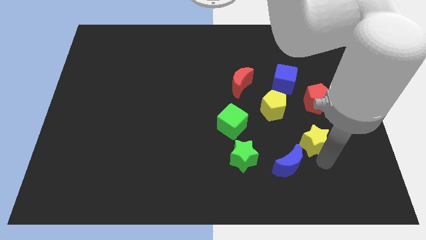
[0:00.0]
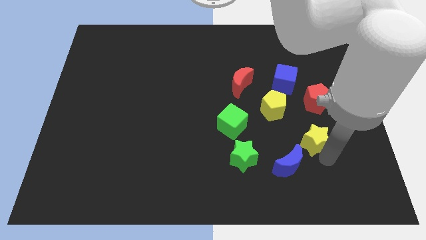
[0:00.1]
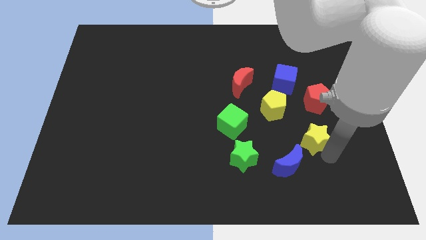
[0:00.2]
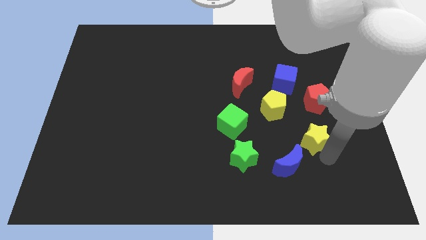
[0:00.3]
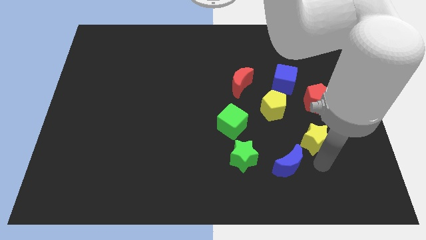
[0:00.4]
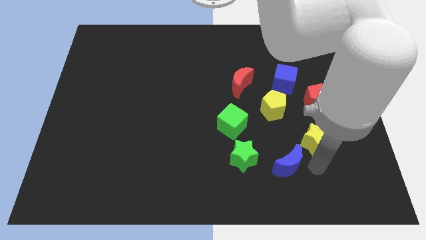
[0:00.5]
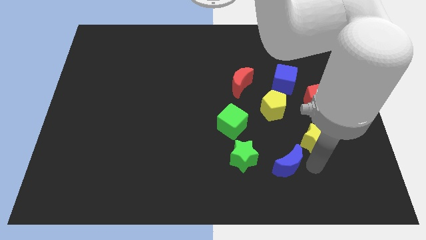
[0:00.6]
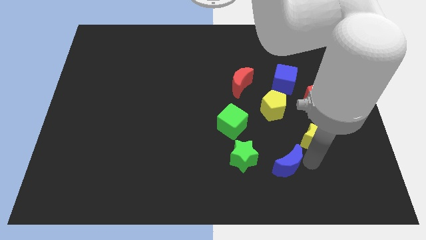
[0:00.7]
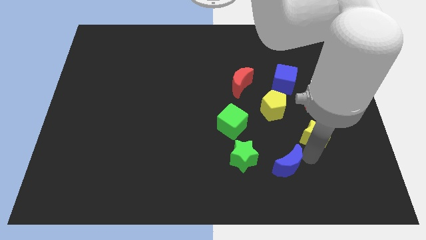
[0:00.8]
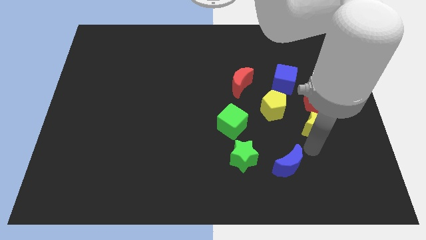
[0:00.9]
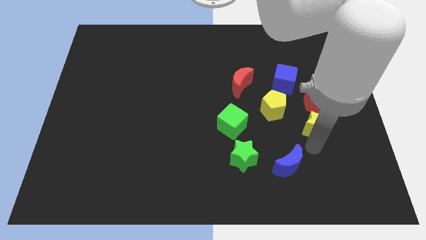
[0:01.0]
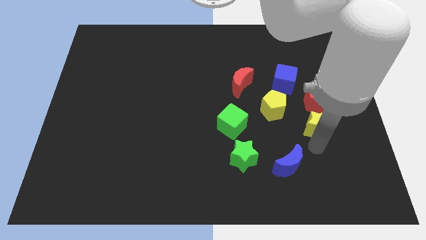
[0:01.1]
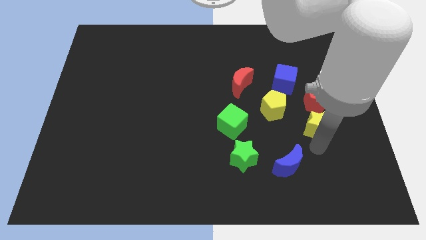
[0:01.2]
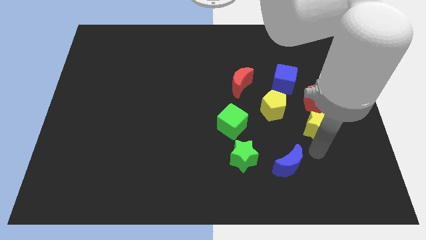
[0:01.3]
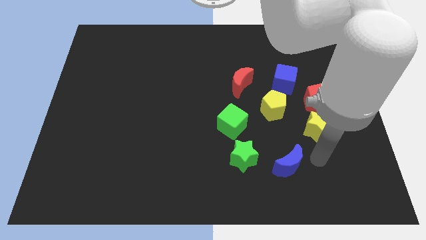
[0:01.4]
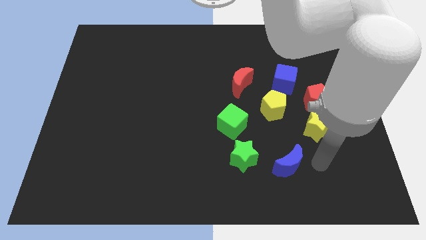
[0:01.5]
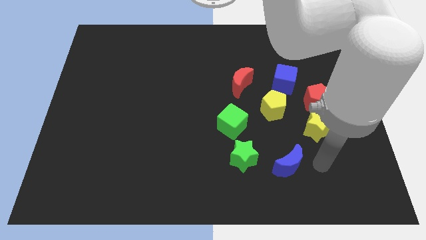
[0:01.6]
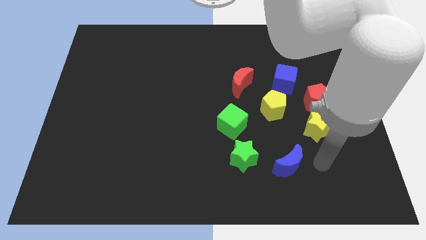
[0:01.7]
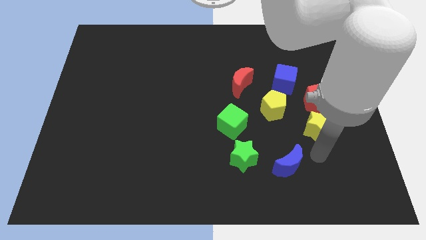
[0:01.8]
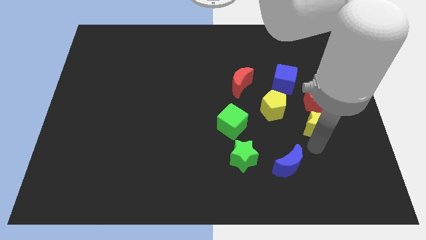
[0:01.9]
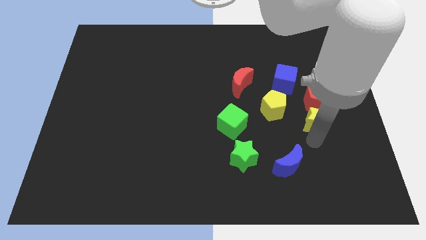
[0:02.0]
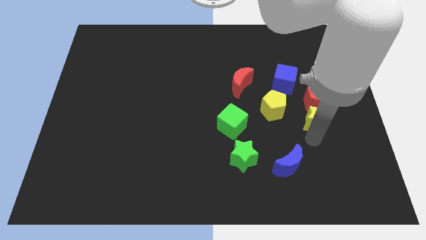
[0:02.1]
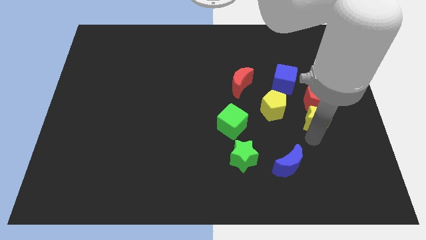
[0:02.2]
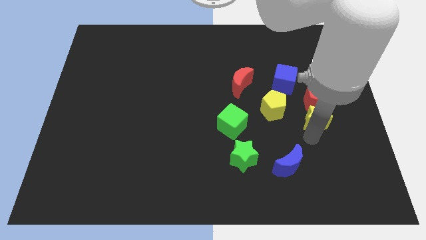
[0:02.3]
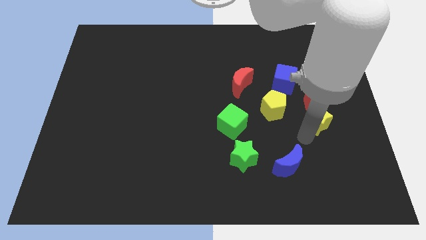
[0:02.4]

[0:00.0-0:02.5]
push the yellow star into the red pentagon

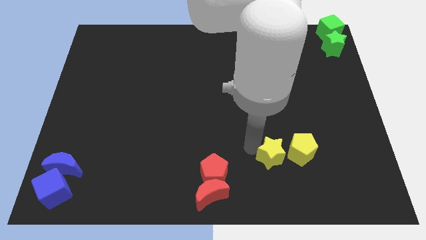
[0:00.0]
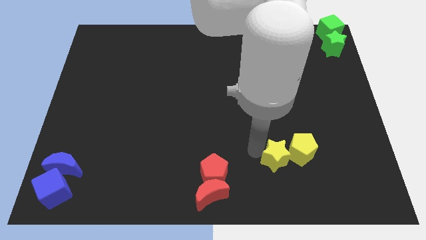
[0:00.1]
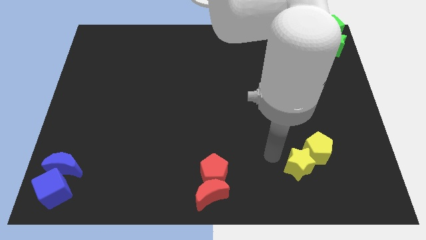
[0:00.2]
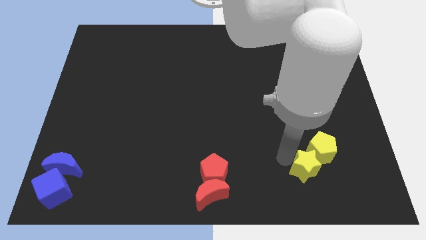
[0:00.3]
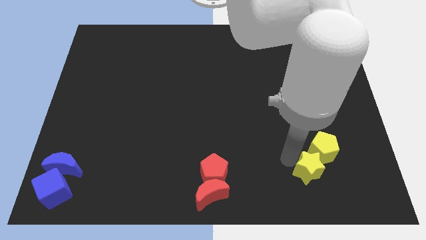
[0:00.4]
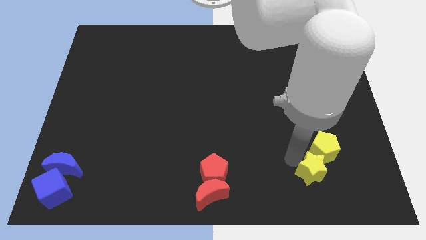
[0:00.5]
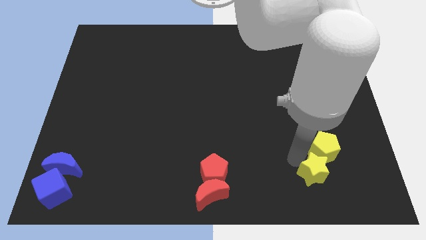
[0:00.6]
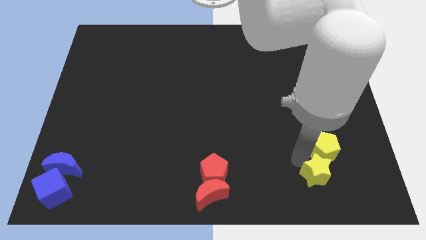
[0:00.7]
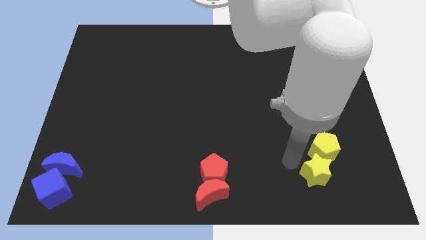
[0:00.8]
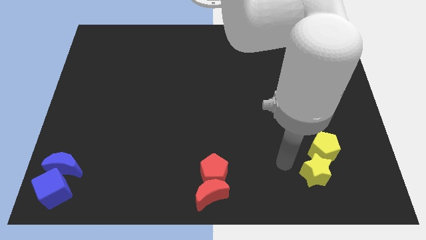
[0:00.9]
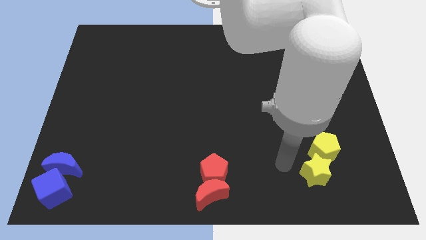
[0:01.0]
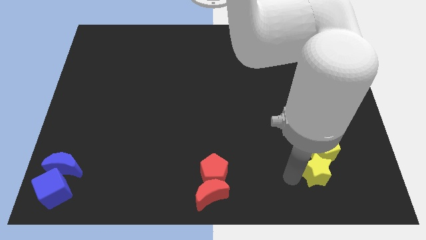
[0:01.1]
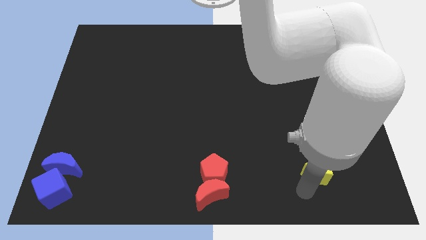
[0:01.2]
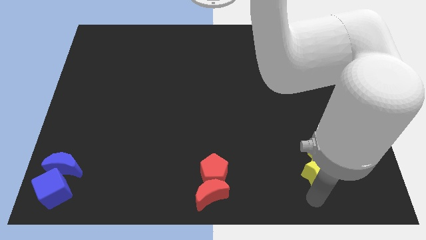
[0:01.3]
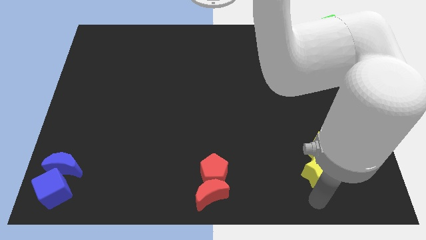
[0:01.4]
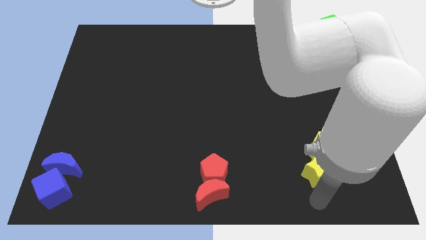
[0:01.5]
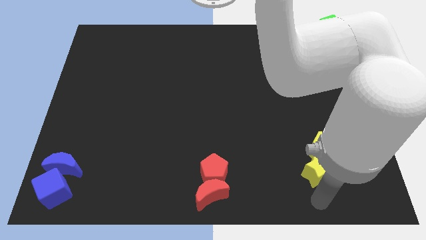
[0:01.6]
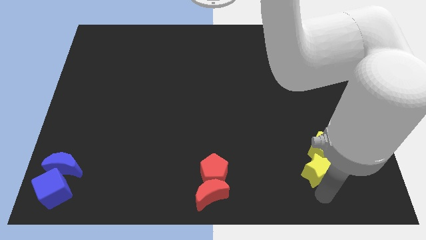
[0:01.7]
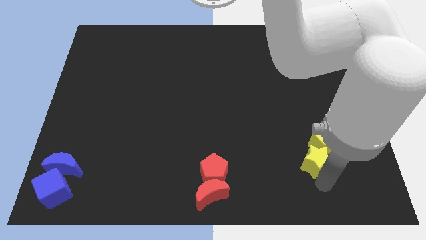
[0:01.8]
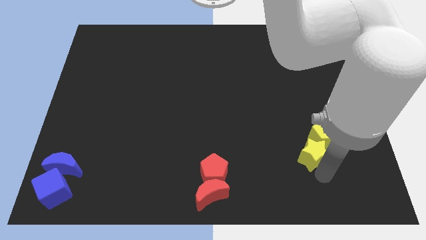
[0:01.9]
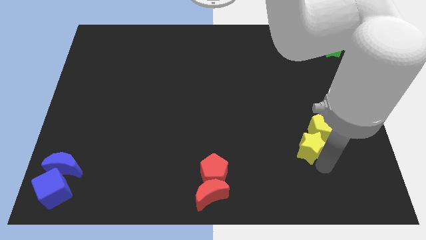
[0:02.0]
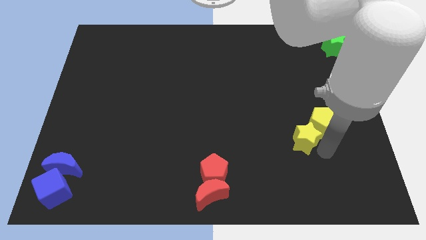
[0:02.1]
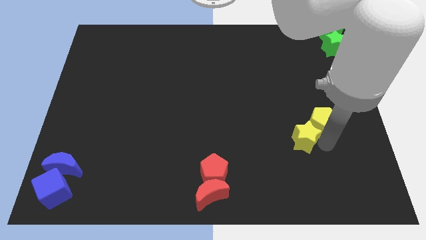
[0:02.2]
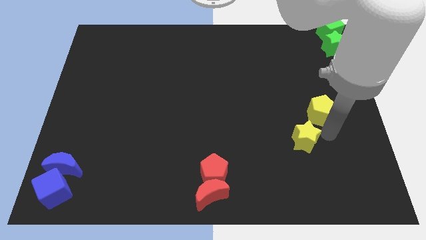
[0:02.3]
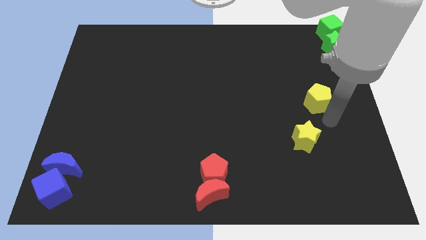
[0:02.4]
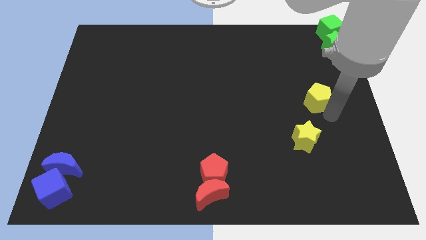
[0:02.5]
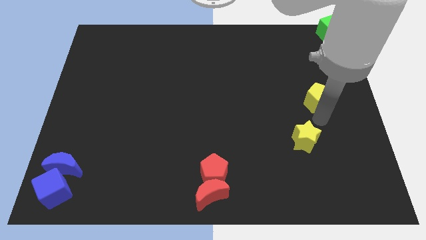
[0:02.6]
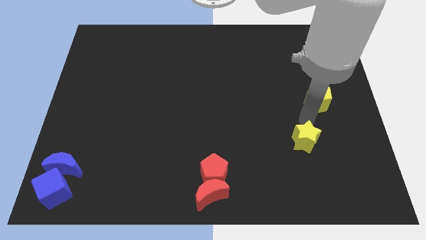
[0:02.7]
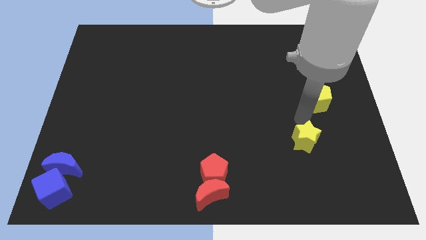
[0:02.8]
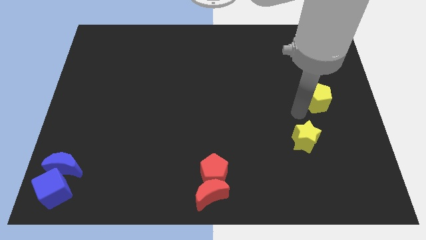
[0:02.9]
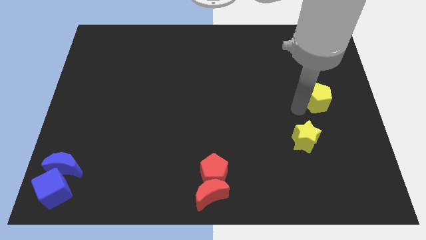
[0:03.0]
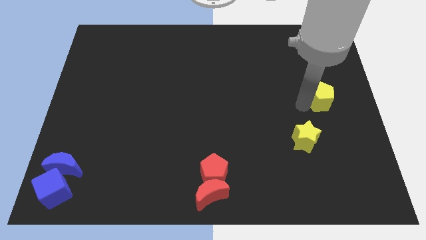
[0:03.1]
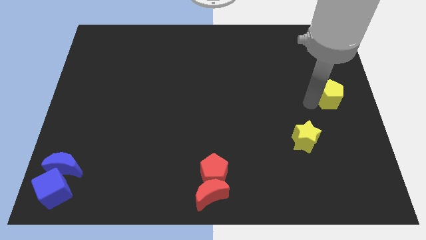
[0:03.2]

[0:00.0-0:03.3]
push the group of yellow blocks upwards

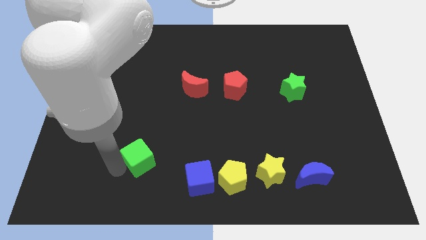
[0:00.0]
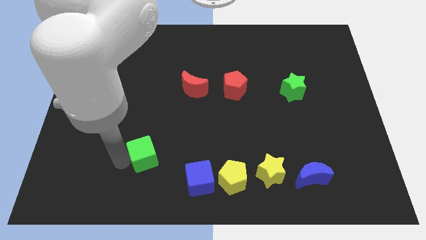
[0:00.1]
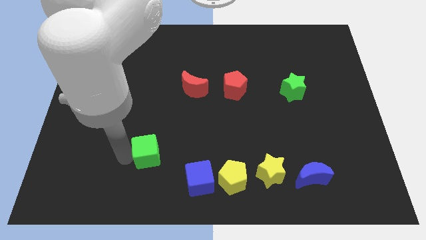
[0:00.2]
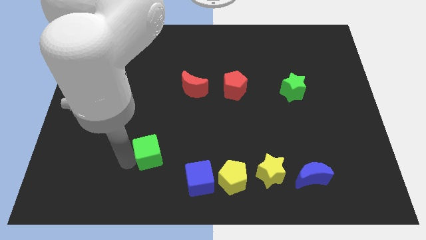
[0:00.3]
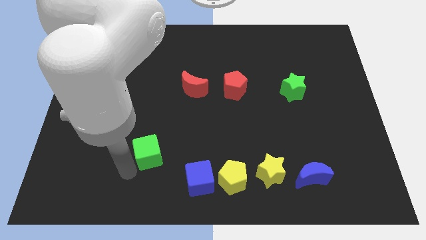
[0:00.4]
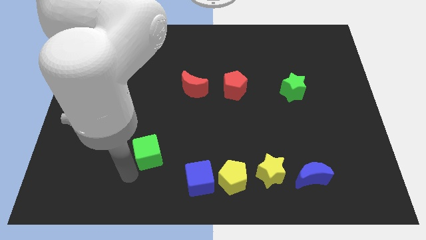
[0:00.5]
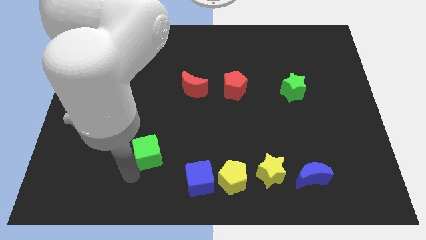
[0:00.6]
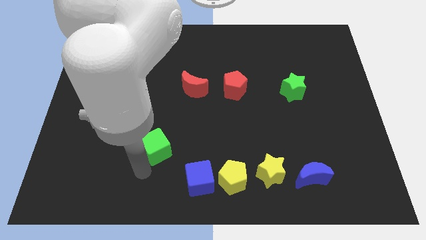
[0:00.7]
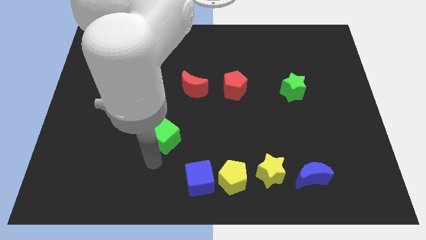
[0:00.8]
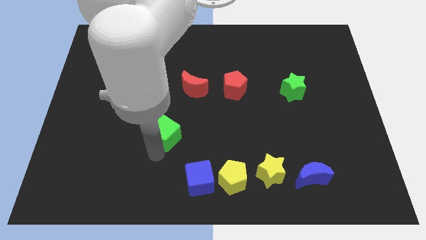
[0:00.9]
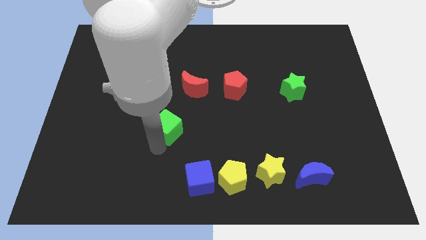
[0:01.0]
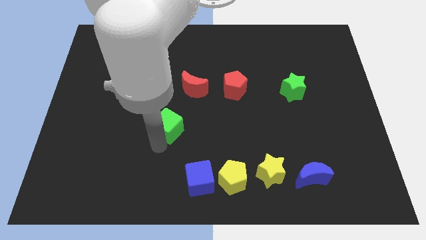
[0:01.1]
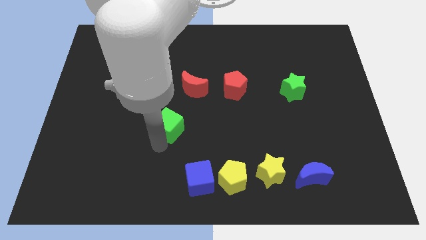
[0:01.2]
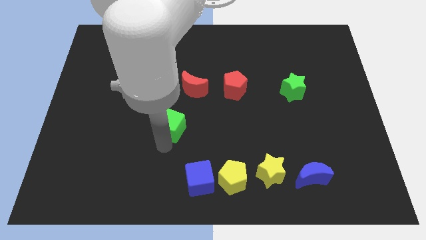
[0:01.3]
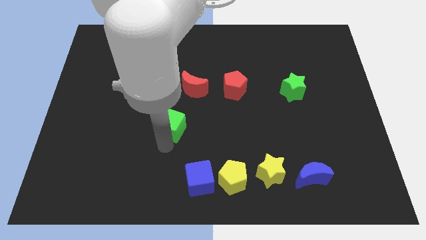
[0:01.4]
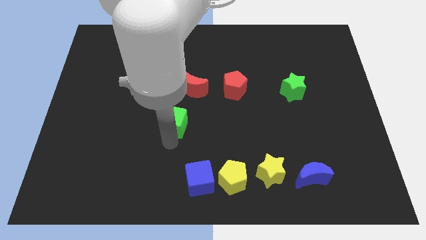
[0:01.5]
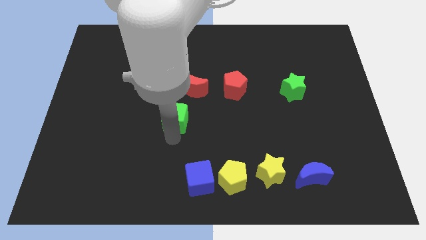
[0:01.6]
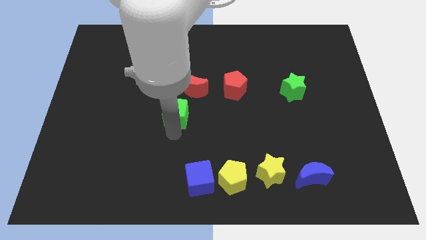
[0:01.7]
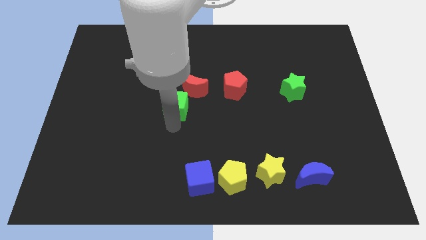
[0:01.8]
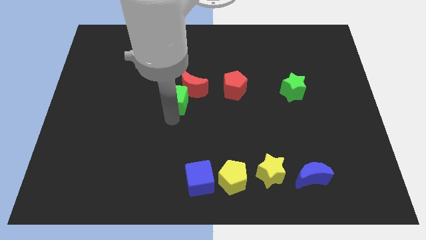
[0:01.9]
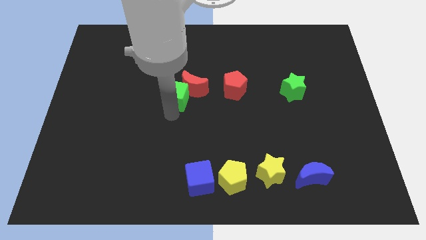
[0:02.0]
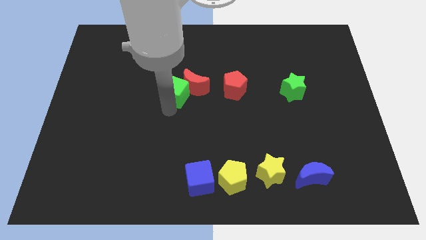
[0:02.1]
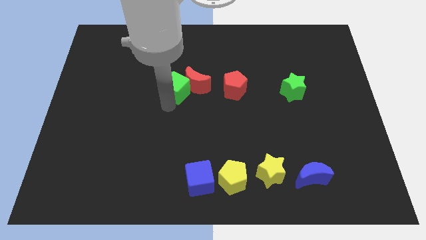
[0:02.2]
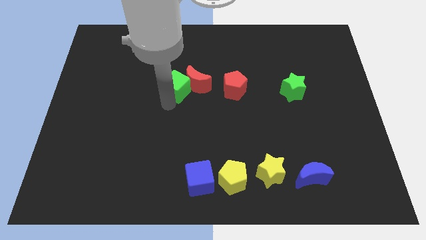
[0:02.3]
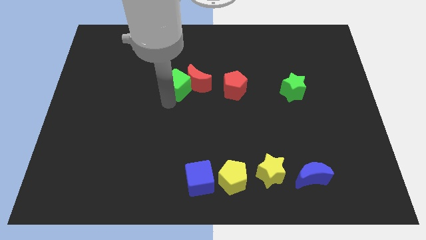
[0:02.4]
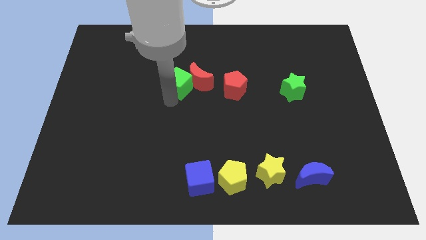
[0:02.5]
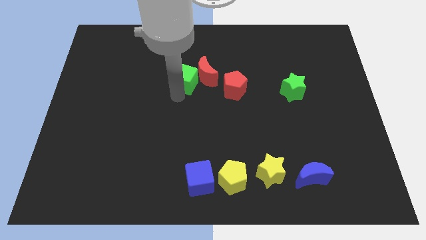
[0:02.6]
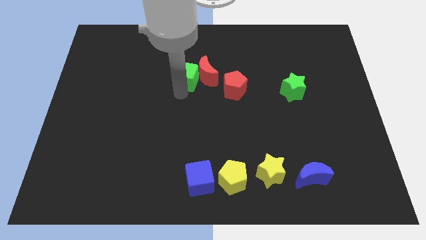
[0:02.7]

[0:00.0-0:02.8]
push the green cube into the red moon

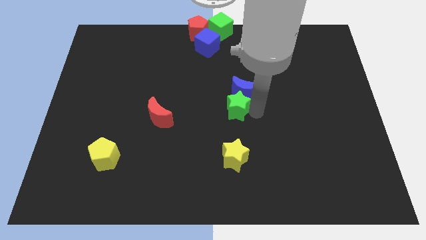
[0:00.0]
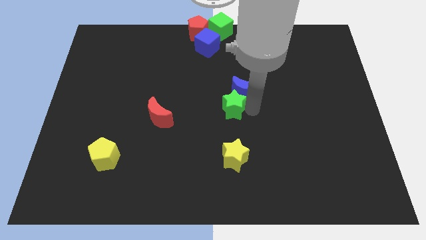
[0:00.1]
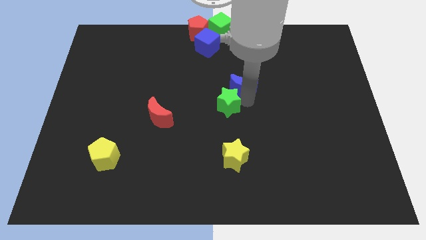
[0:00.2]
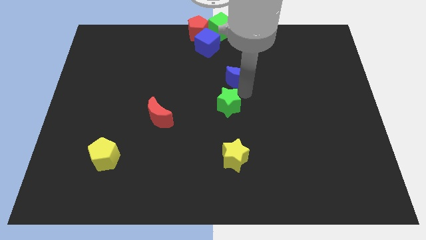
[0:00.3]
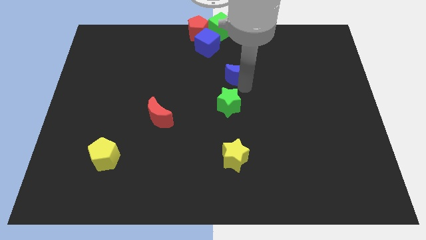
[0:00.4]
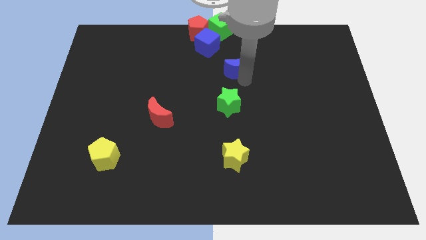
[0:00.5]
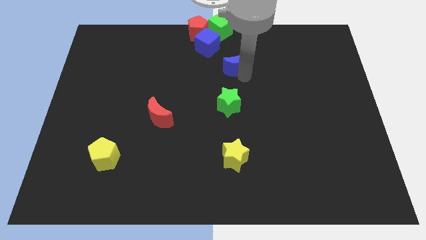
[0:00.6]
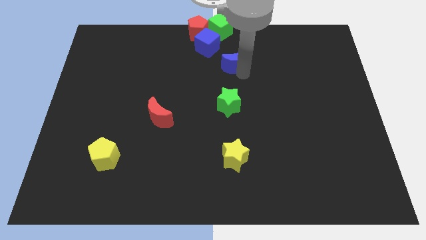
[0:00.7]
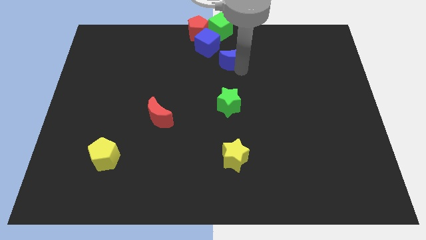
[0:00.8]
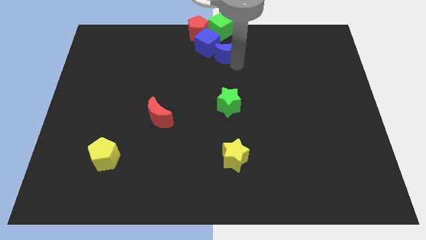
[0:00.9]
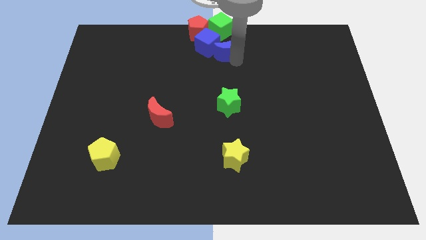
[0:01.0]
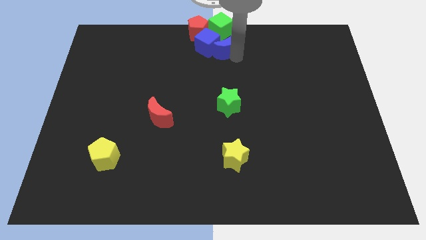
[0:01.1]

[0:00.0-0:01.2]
move blue crescent away from the green star
